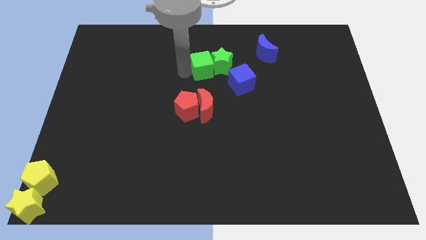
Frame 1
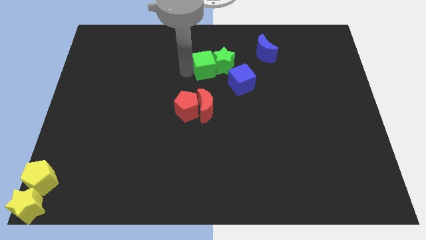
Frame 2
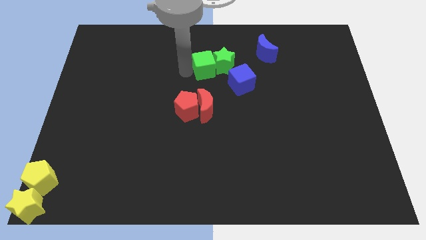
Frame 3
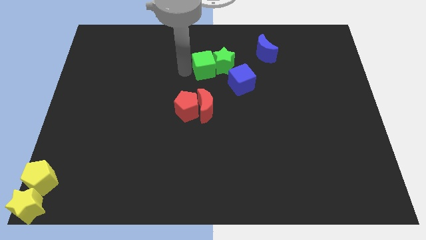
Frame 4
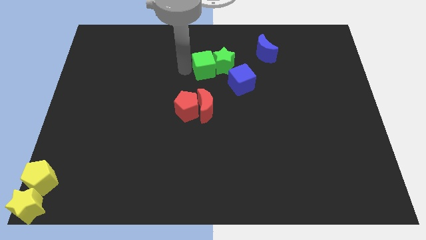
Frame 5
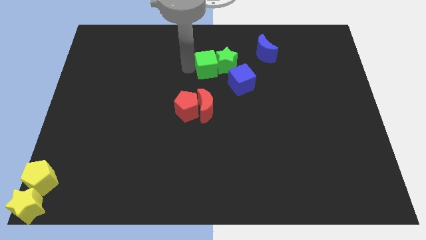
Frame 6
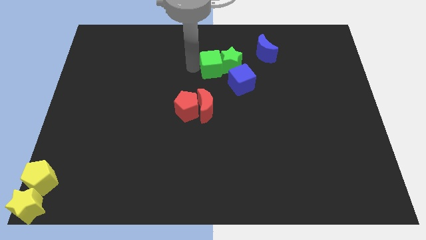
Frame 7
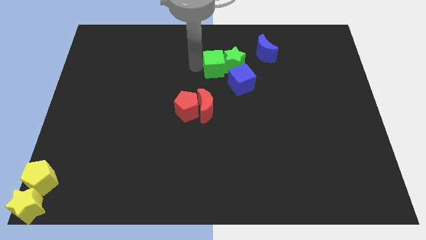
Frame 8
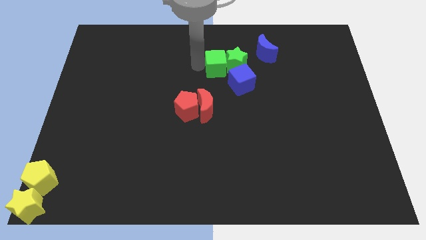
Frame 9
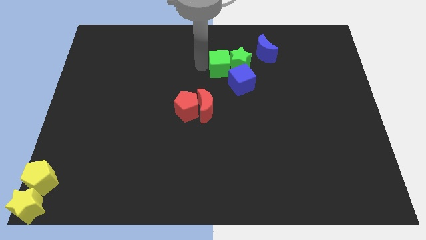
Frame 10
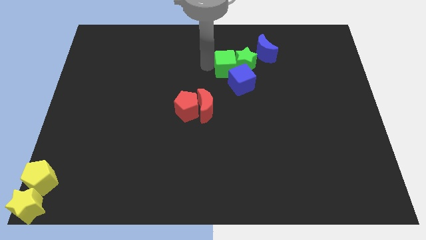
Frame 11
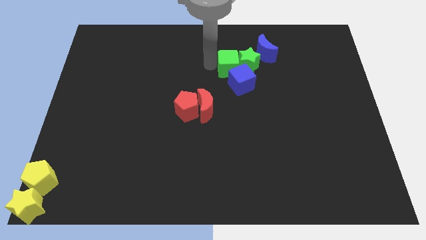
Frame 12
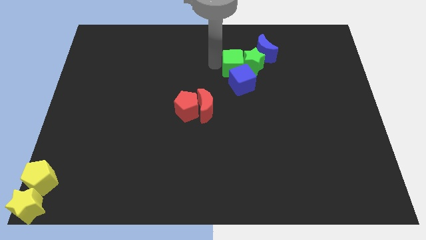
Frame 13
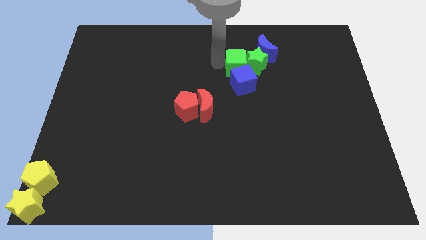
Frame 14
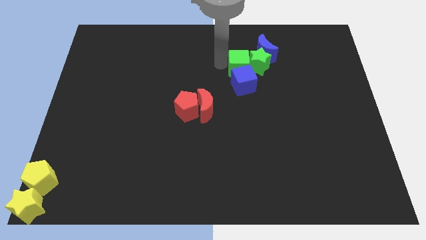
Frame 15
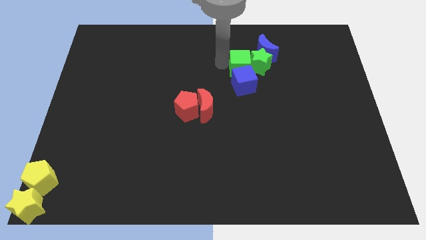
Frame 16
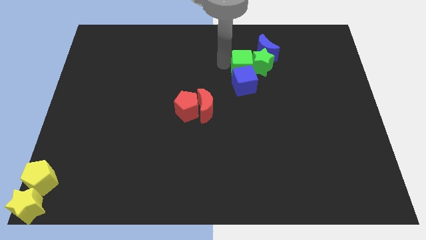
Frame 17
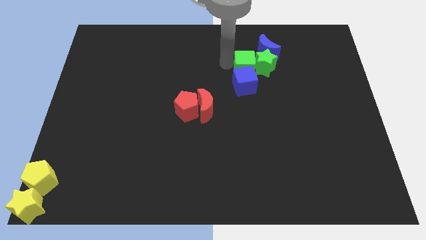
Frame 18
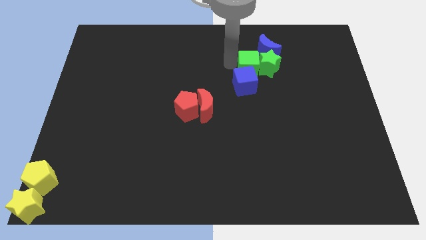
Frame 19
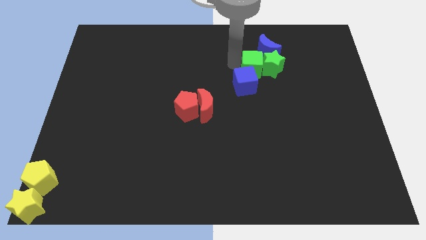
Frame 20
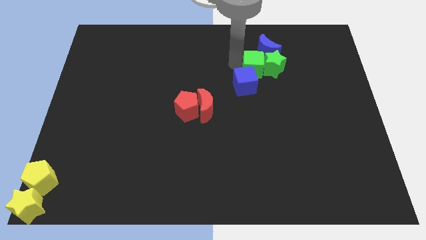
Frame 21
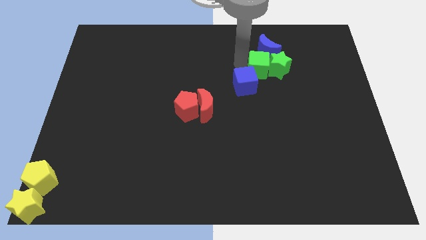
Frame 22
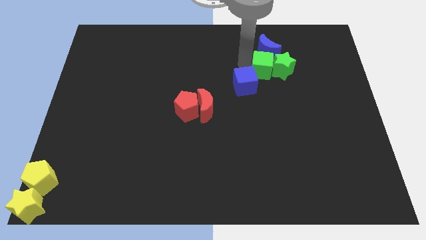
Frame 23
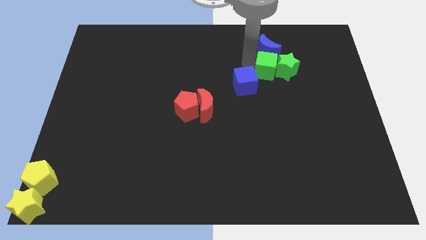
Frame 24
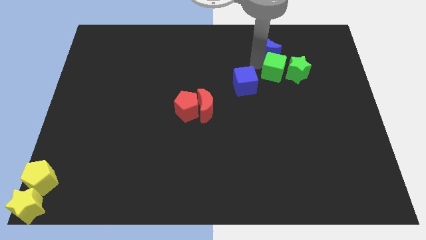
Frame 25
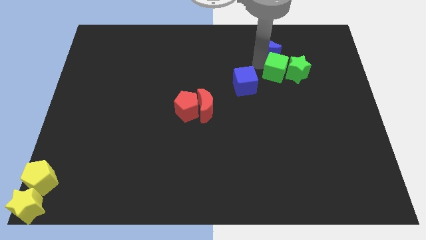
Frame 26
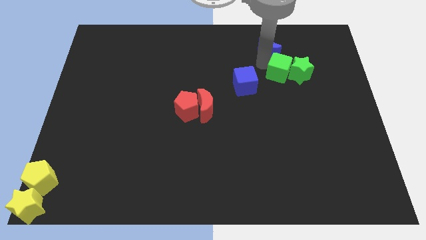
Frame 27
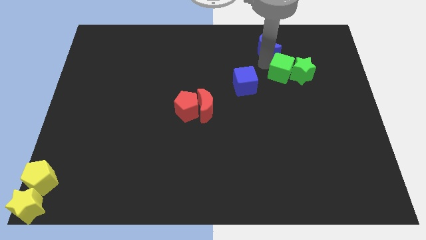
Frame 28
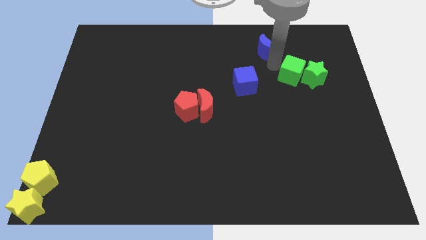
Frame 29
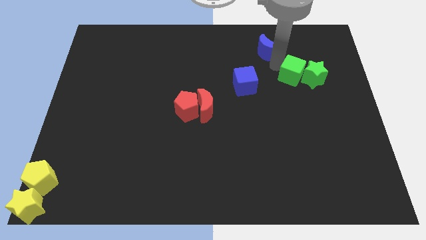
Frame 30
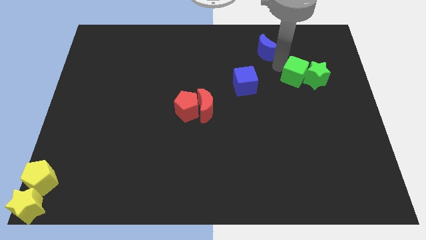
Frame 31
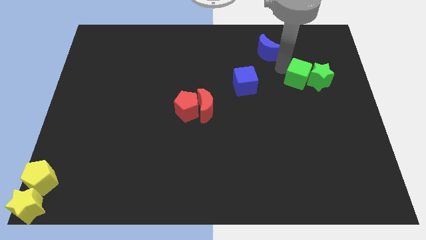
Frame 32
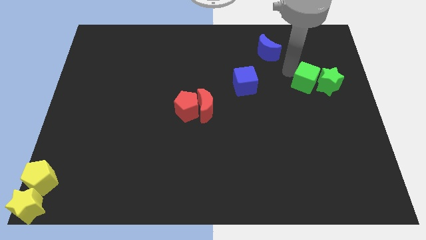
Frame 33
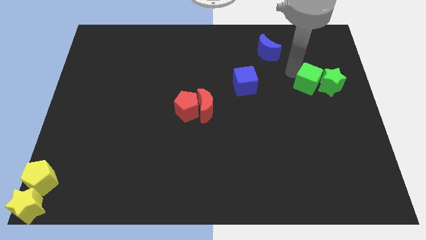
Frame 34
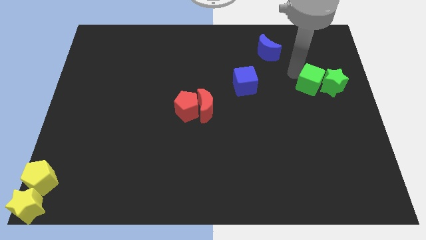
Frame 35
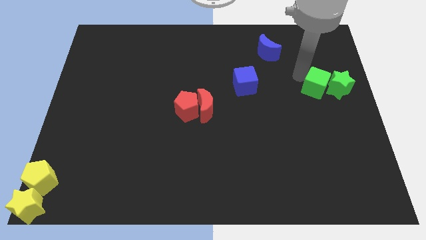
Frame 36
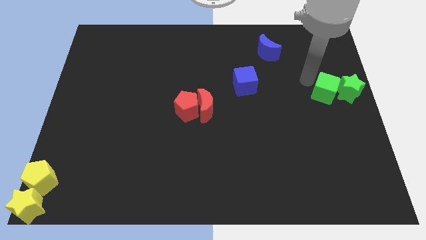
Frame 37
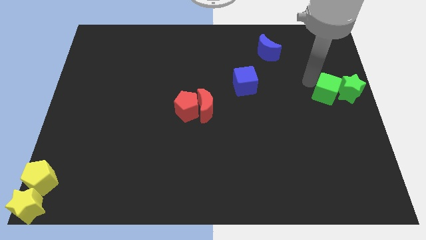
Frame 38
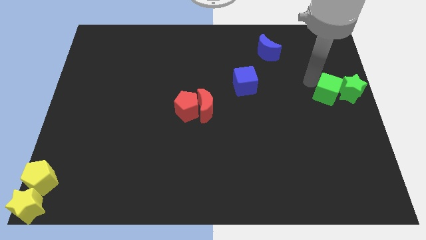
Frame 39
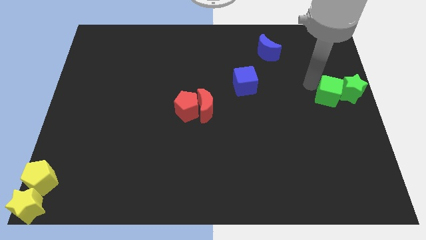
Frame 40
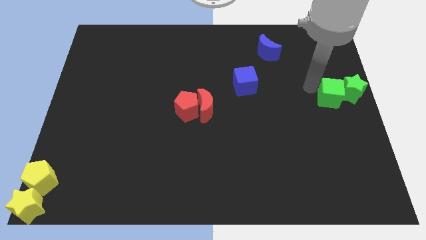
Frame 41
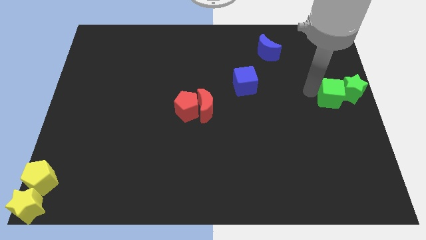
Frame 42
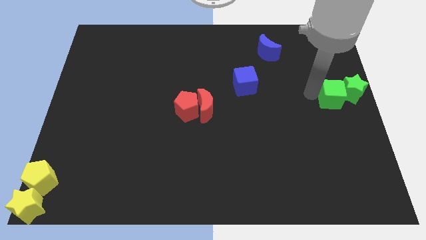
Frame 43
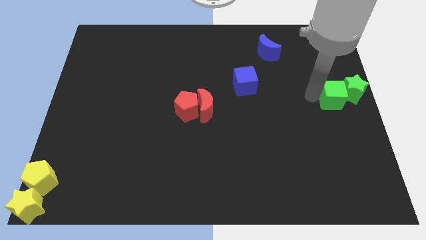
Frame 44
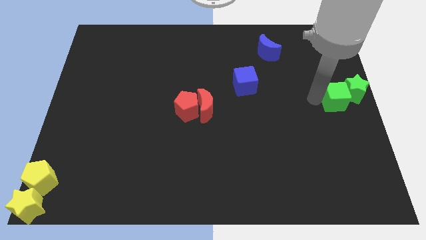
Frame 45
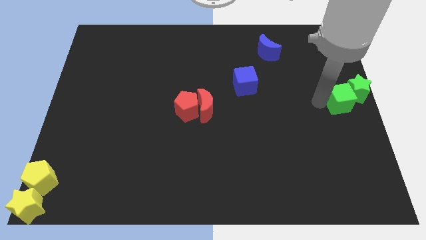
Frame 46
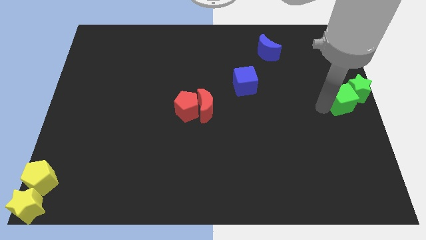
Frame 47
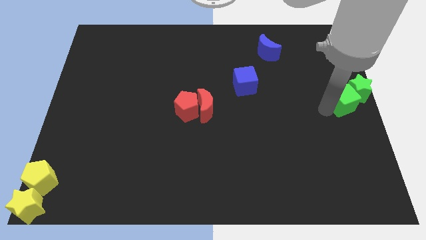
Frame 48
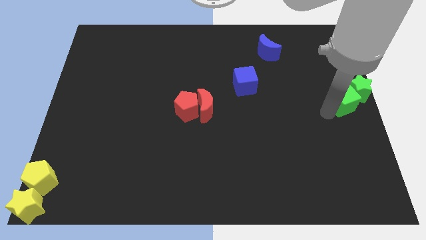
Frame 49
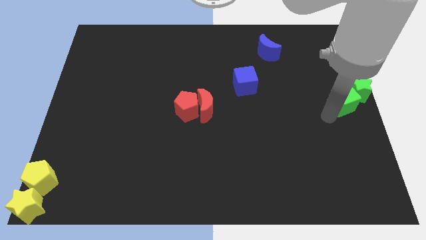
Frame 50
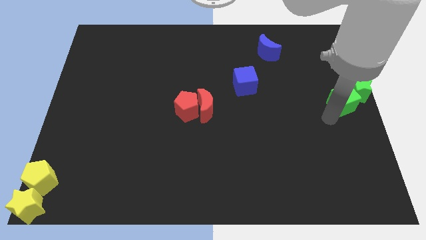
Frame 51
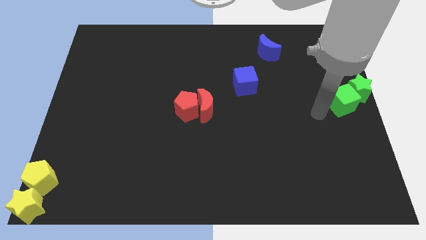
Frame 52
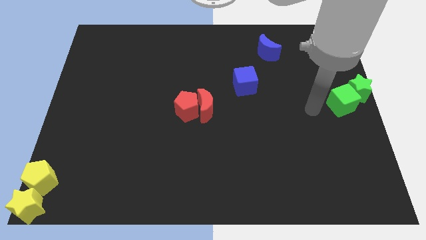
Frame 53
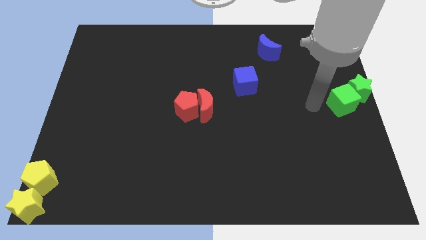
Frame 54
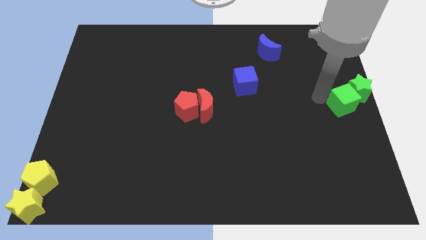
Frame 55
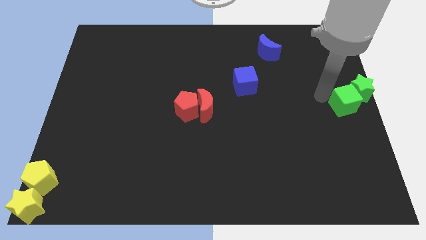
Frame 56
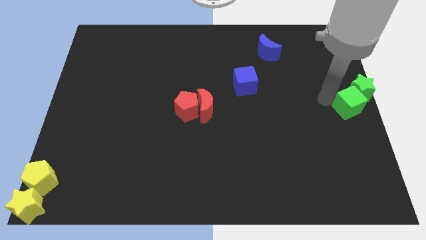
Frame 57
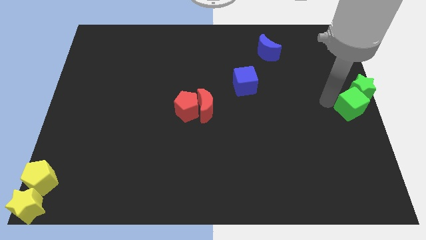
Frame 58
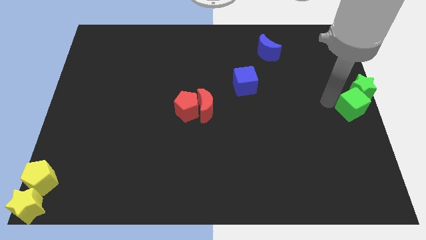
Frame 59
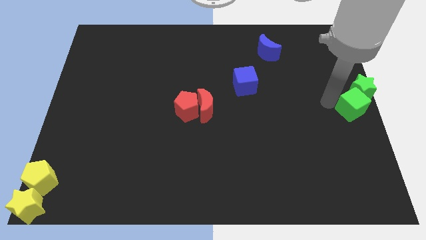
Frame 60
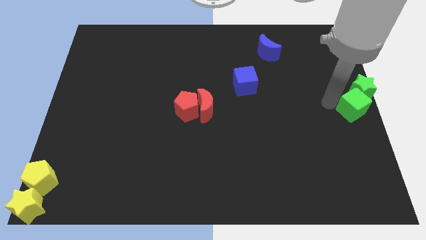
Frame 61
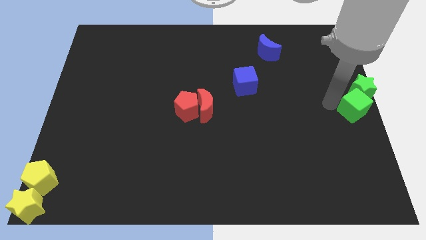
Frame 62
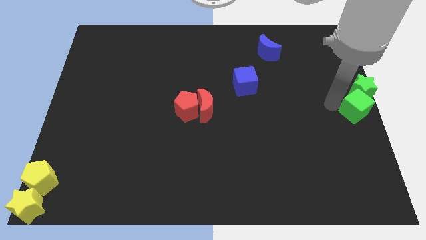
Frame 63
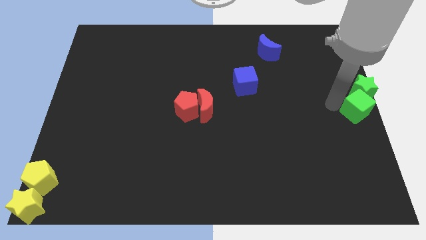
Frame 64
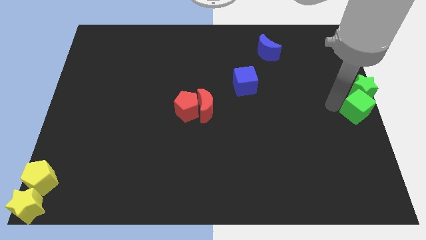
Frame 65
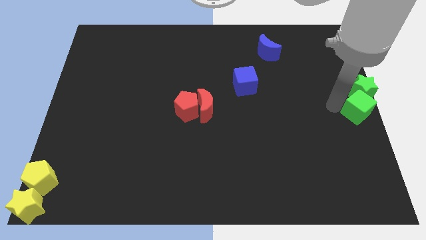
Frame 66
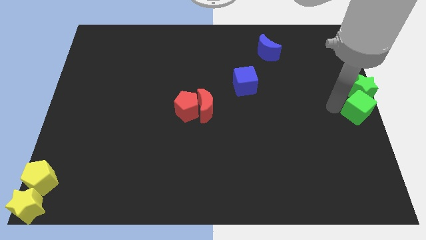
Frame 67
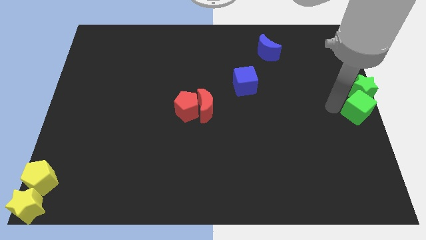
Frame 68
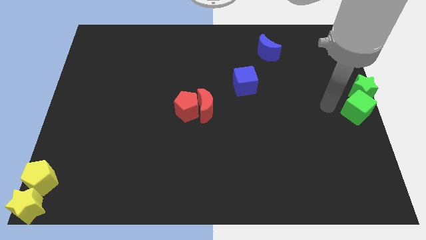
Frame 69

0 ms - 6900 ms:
move the green blocks to the right center of the board

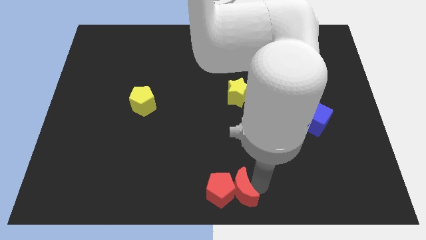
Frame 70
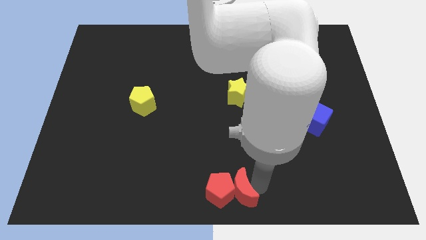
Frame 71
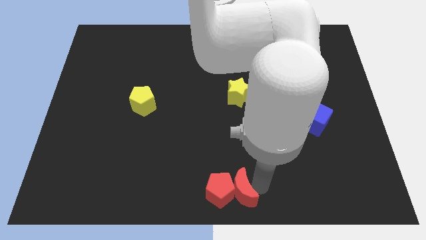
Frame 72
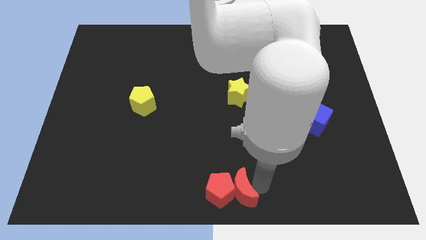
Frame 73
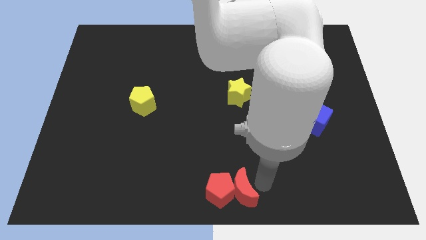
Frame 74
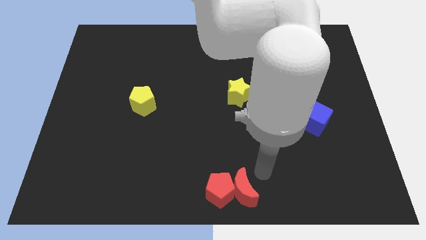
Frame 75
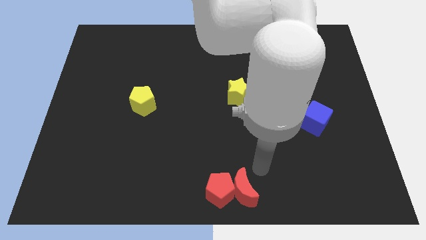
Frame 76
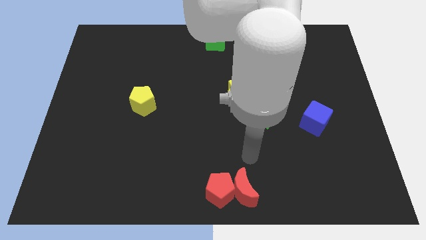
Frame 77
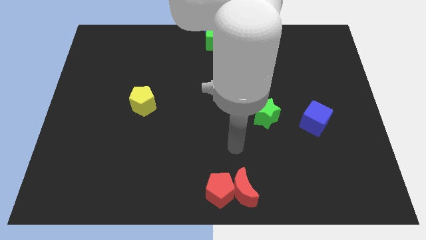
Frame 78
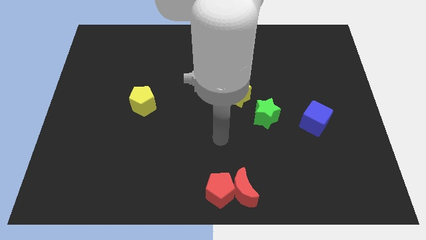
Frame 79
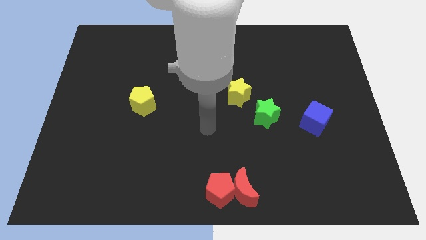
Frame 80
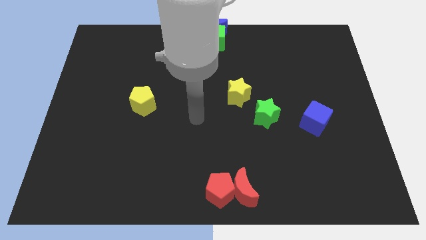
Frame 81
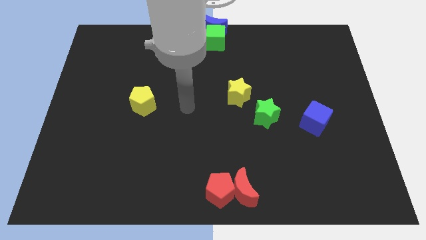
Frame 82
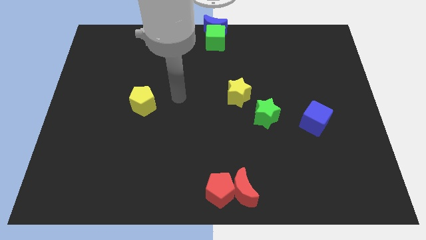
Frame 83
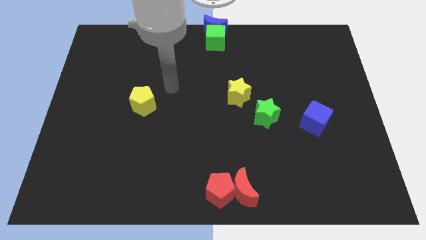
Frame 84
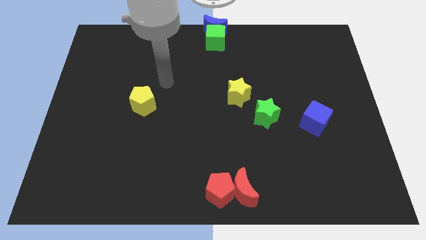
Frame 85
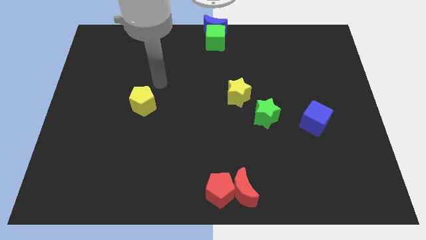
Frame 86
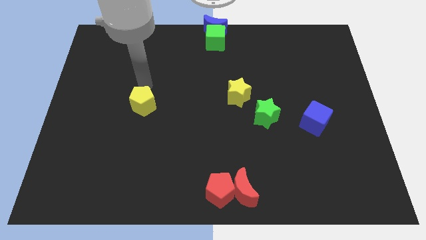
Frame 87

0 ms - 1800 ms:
point your arm above the yellow pentagon

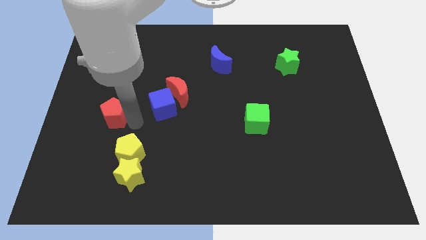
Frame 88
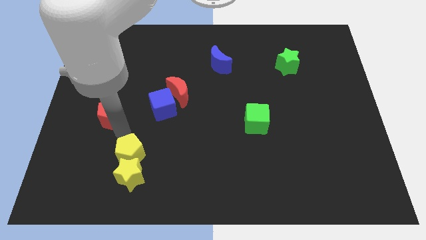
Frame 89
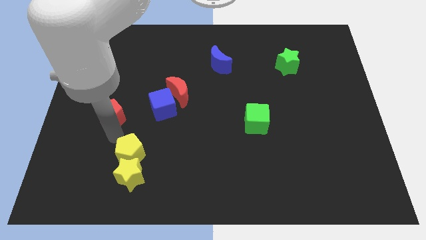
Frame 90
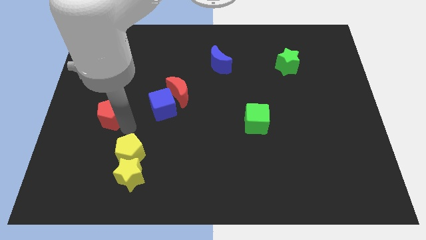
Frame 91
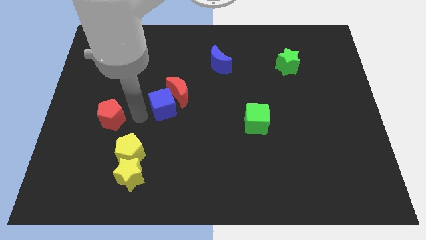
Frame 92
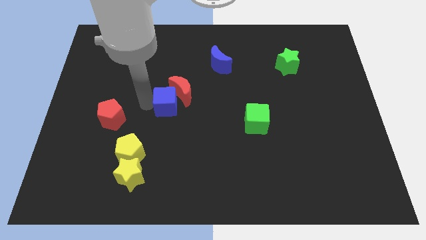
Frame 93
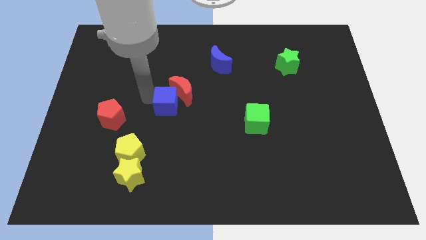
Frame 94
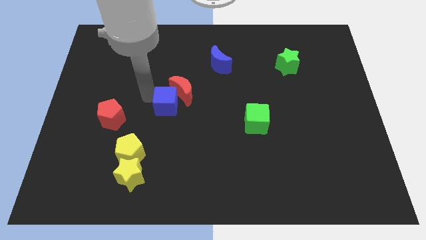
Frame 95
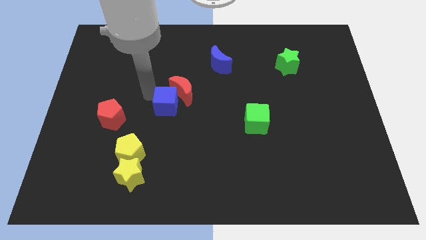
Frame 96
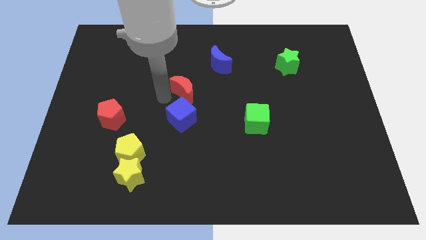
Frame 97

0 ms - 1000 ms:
move blue cube slightly
